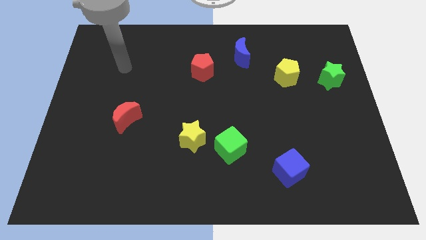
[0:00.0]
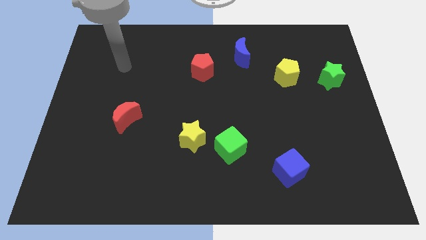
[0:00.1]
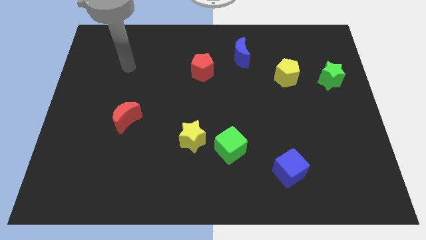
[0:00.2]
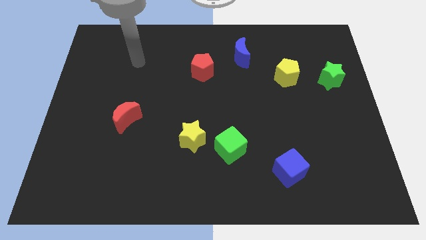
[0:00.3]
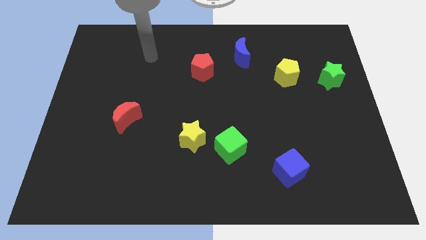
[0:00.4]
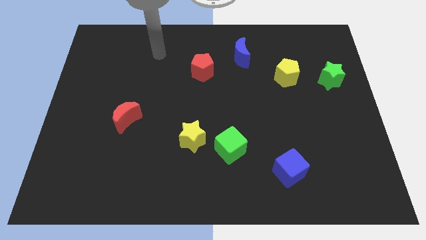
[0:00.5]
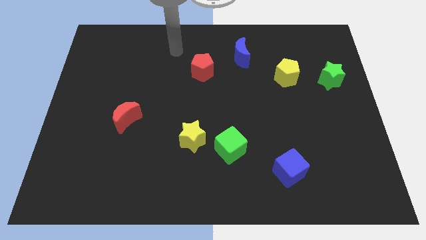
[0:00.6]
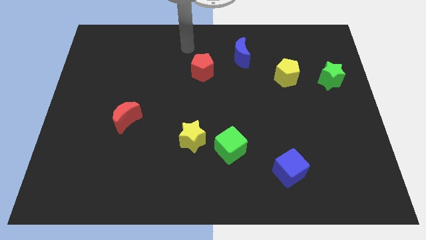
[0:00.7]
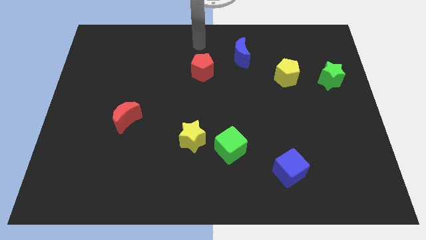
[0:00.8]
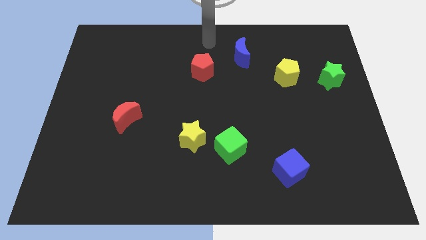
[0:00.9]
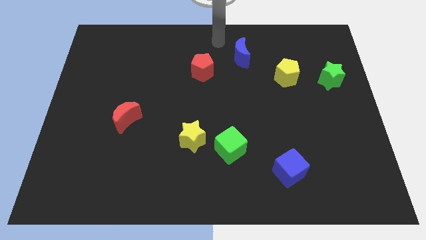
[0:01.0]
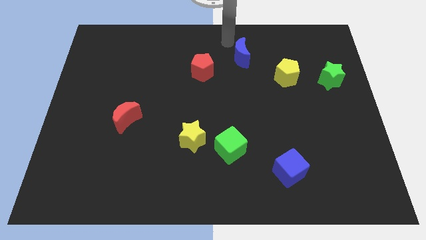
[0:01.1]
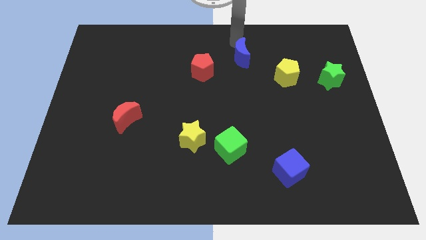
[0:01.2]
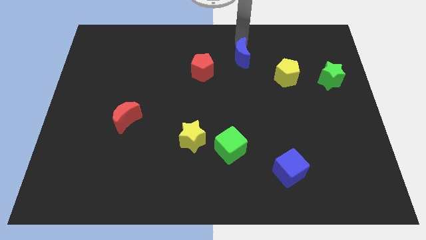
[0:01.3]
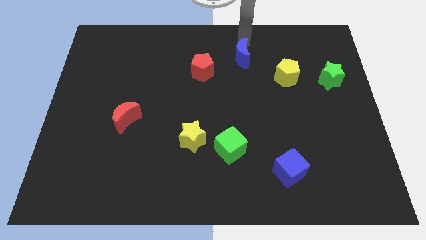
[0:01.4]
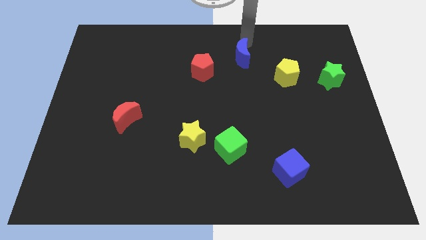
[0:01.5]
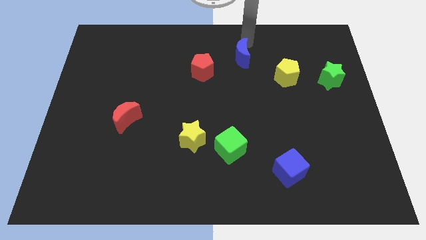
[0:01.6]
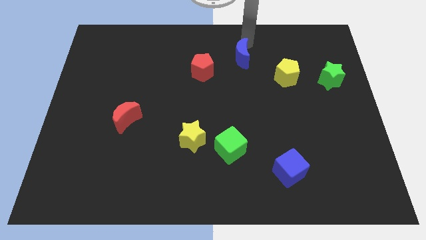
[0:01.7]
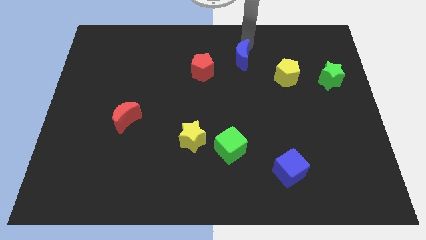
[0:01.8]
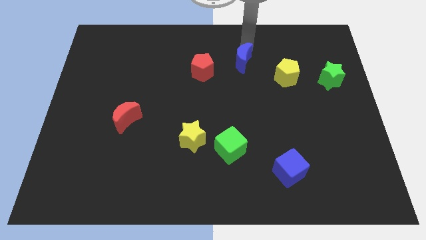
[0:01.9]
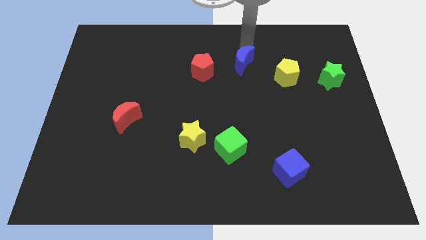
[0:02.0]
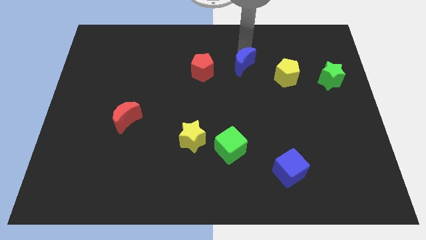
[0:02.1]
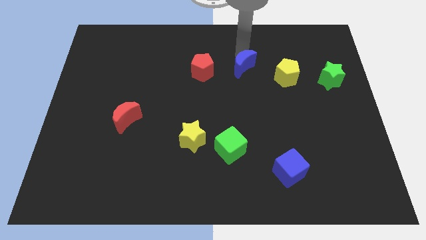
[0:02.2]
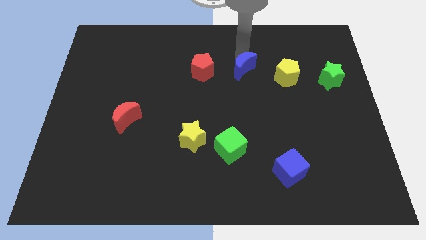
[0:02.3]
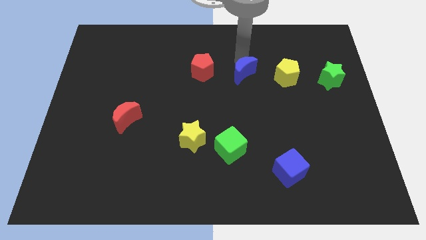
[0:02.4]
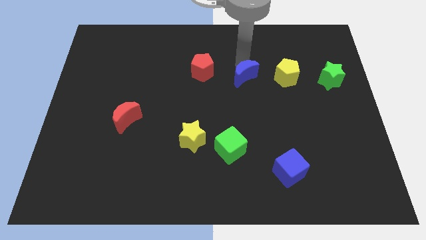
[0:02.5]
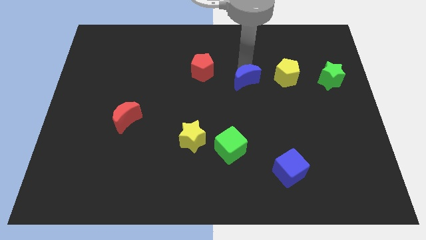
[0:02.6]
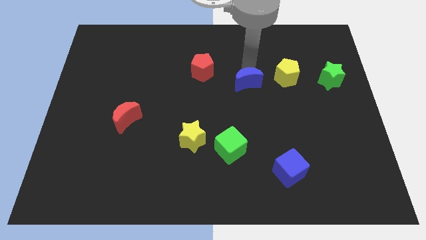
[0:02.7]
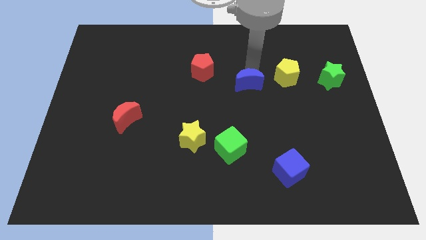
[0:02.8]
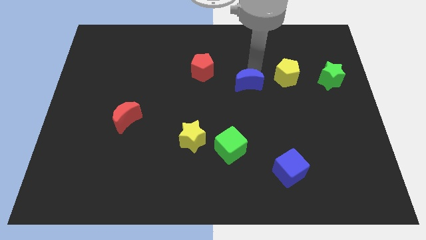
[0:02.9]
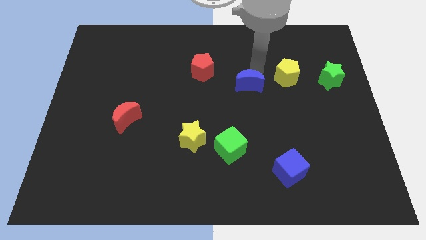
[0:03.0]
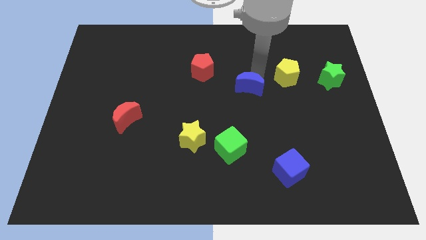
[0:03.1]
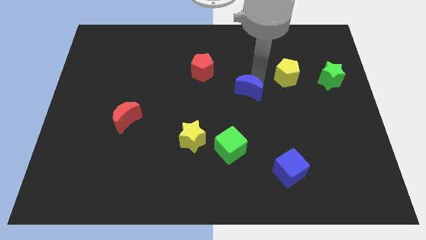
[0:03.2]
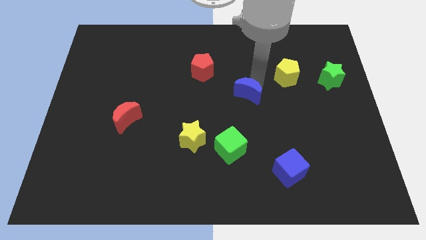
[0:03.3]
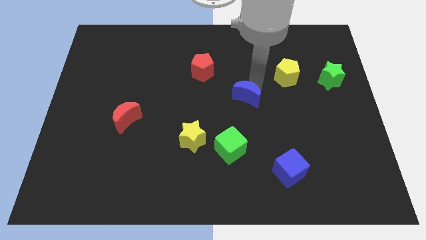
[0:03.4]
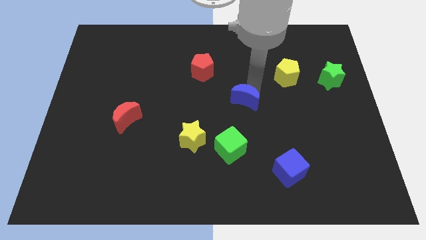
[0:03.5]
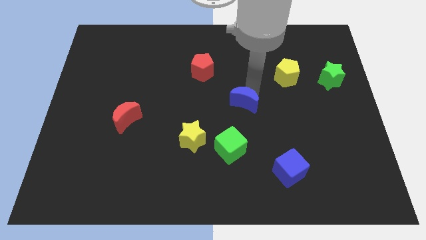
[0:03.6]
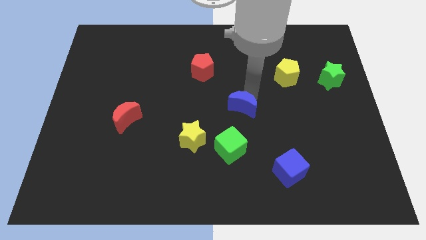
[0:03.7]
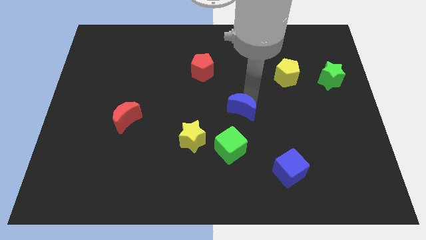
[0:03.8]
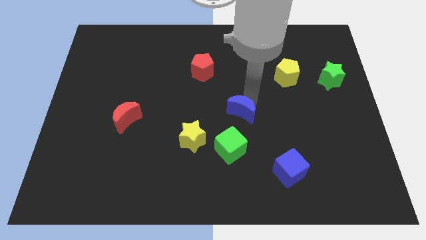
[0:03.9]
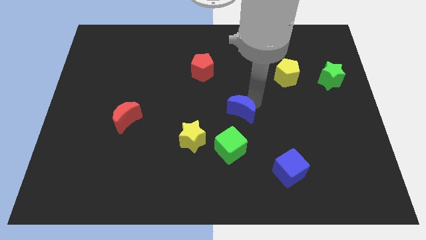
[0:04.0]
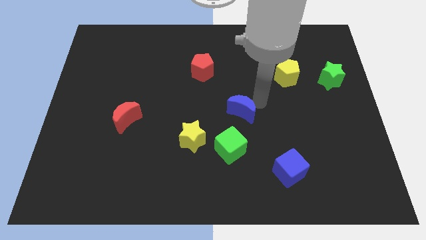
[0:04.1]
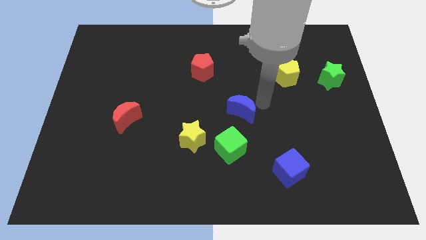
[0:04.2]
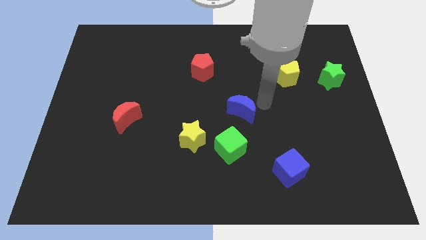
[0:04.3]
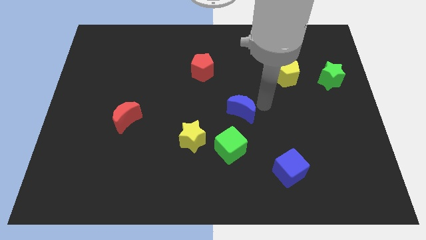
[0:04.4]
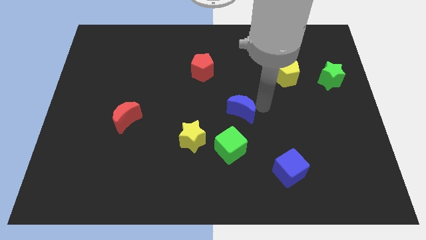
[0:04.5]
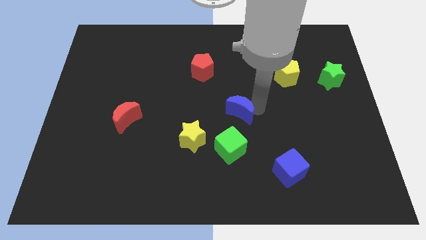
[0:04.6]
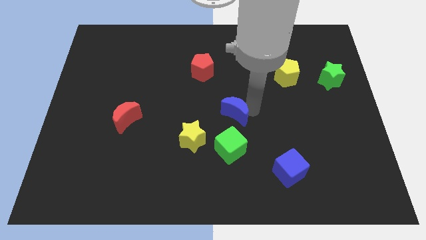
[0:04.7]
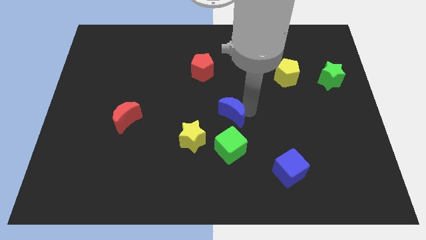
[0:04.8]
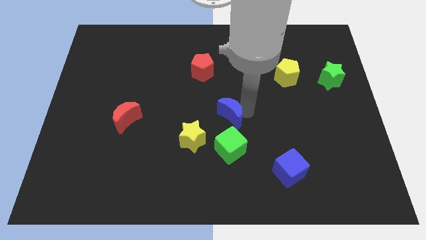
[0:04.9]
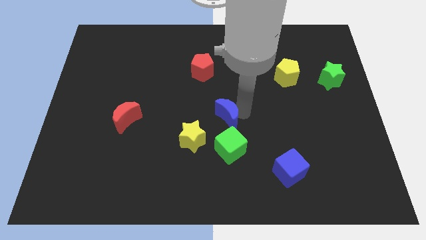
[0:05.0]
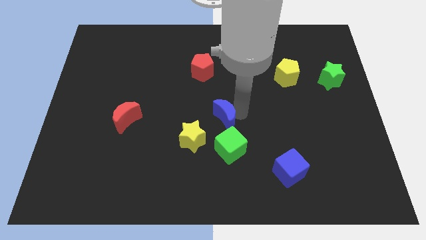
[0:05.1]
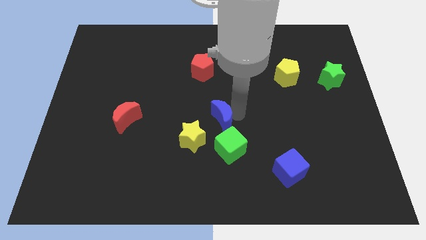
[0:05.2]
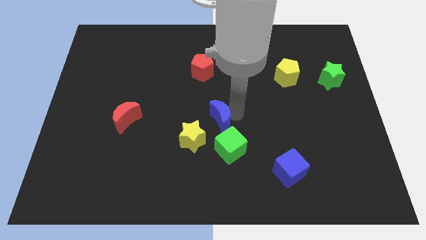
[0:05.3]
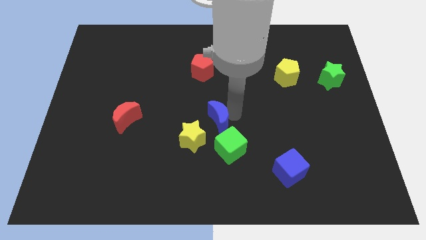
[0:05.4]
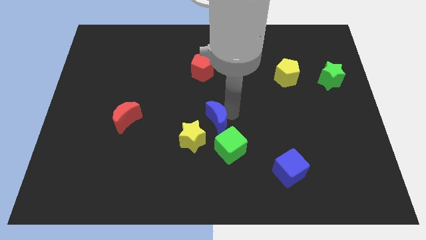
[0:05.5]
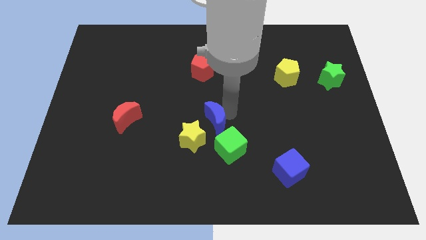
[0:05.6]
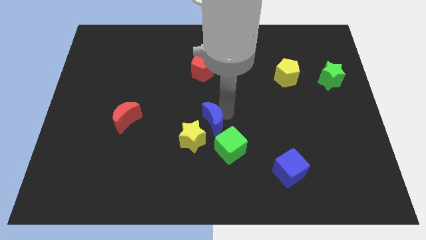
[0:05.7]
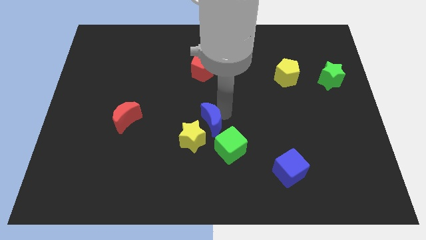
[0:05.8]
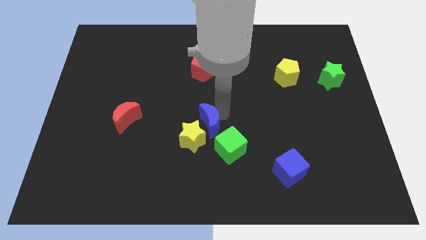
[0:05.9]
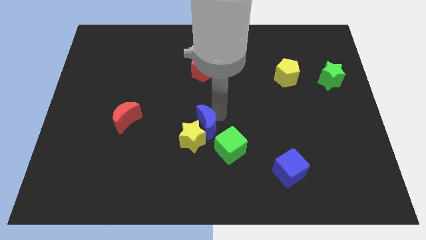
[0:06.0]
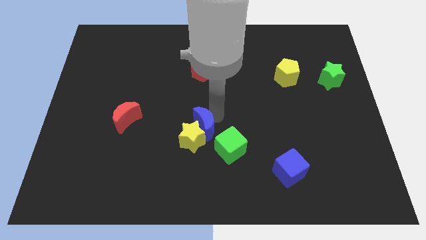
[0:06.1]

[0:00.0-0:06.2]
move the blue moon towards the yellow star

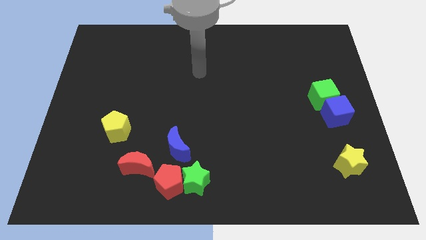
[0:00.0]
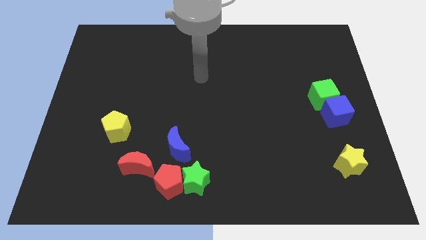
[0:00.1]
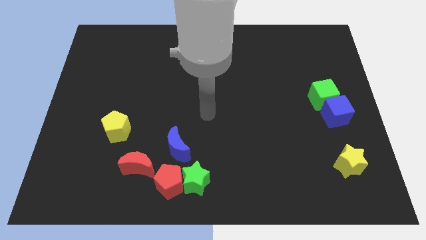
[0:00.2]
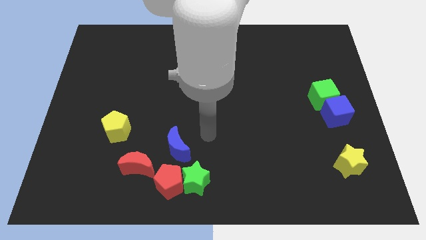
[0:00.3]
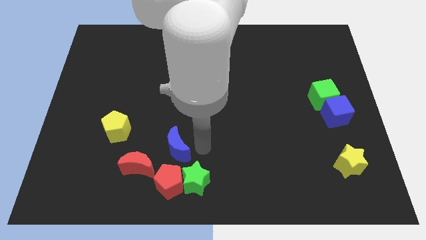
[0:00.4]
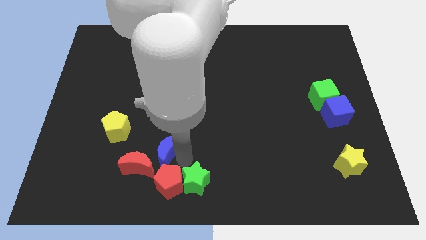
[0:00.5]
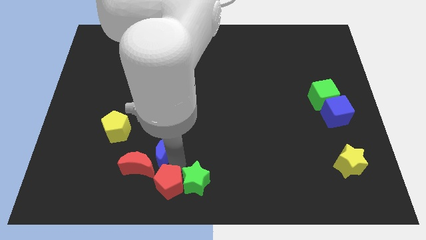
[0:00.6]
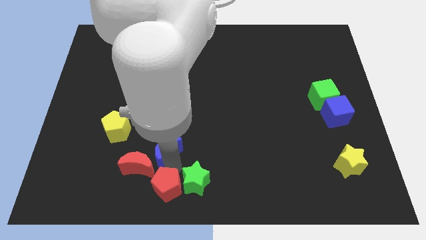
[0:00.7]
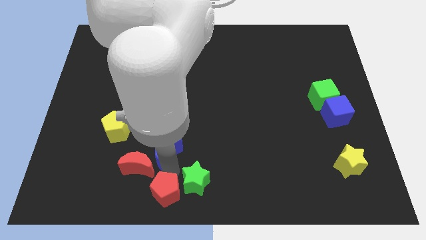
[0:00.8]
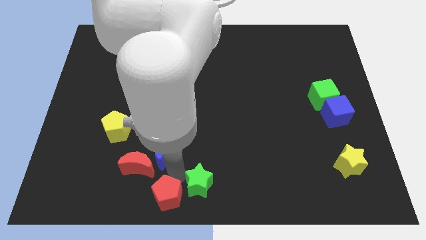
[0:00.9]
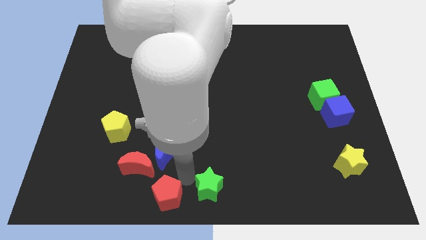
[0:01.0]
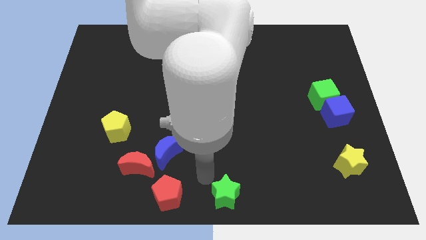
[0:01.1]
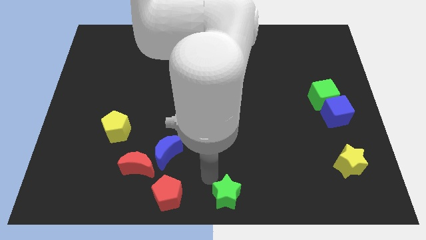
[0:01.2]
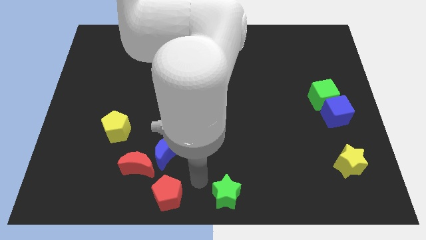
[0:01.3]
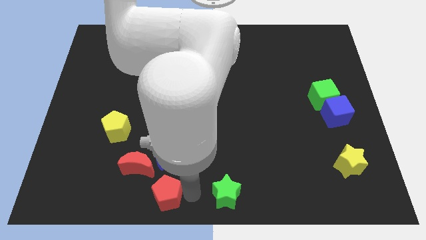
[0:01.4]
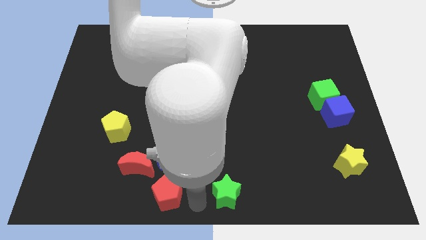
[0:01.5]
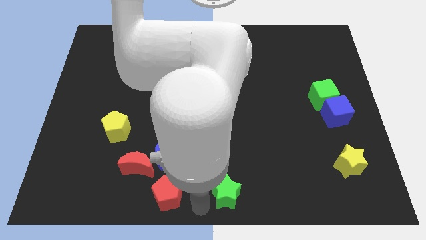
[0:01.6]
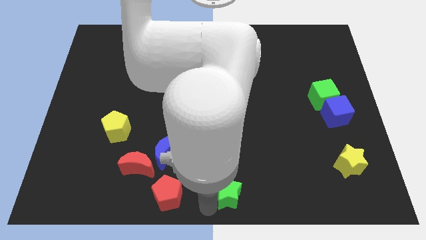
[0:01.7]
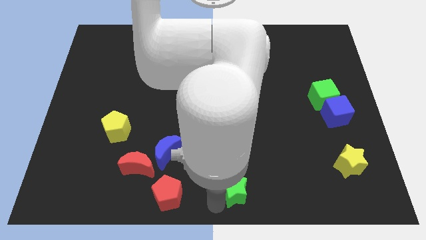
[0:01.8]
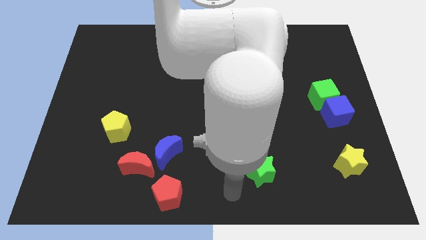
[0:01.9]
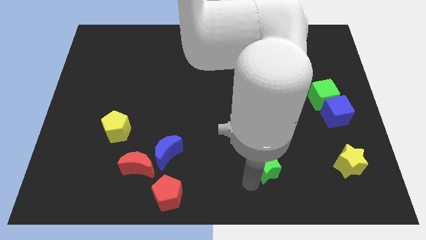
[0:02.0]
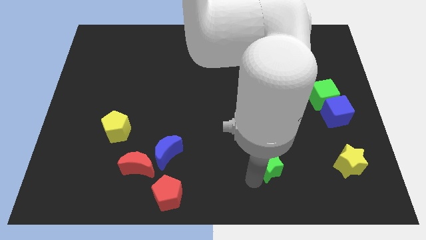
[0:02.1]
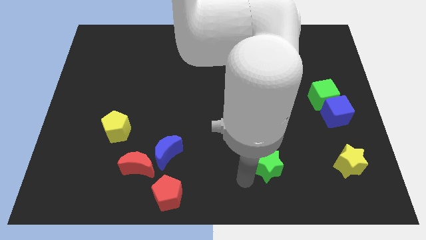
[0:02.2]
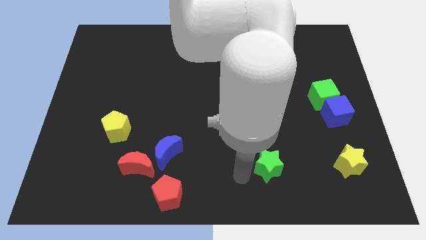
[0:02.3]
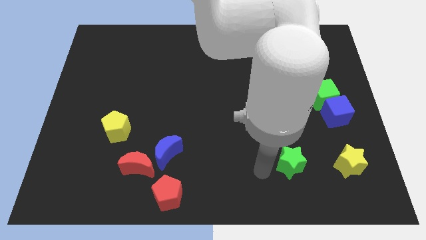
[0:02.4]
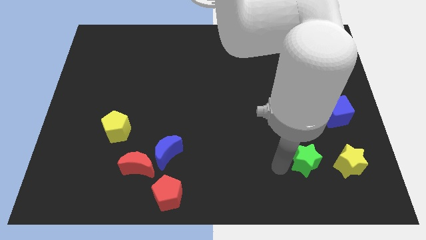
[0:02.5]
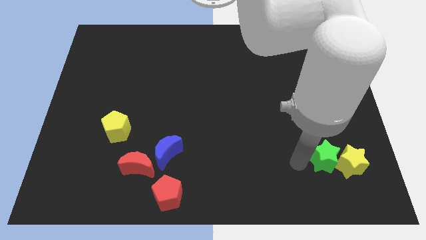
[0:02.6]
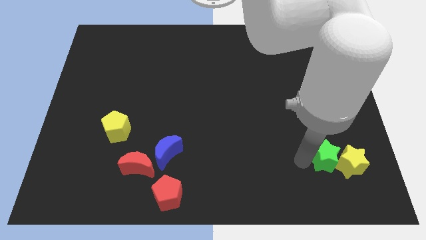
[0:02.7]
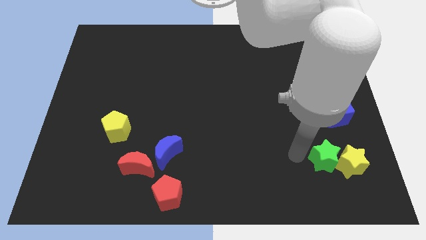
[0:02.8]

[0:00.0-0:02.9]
push the green star towards the yellow star
